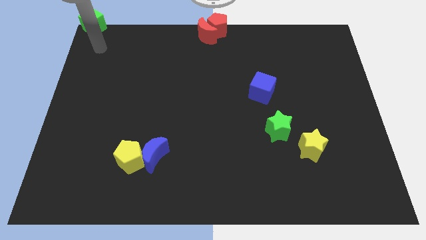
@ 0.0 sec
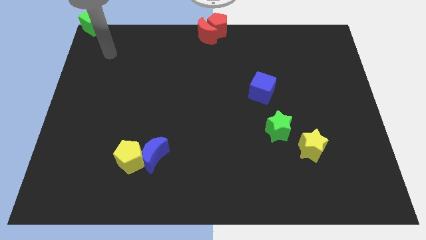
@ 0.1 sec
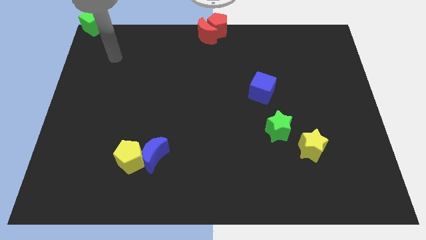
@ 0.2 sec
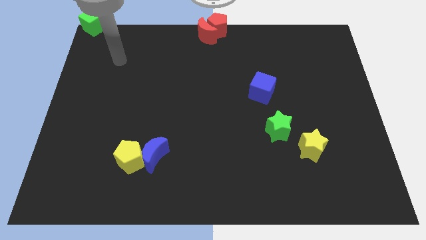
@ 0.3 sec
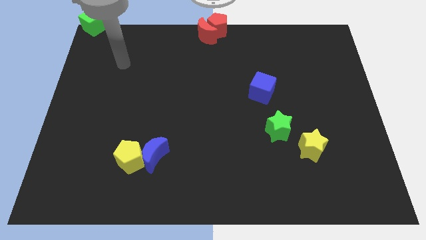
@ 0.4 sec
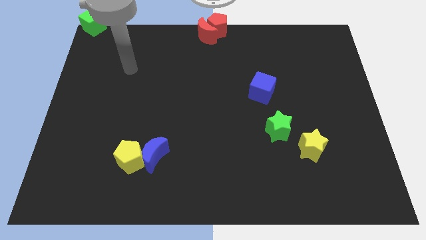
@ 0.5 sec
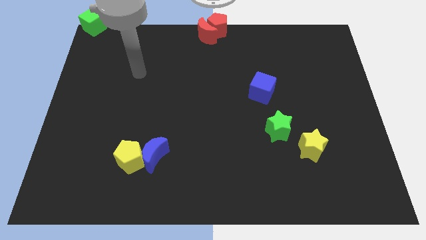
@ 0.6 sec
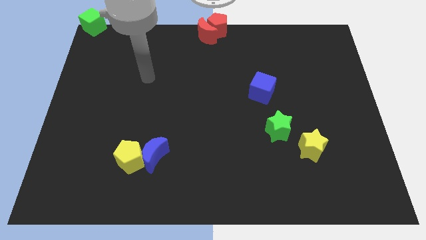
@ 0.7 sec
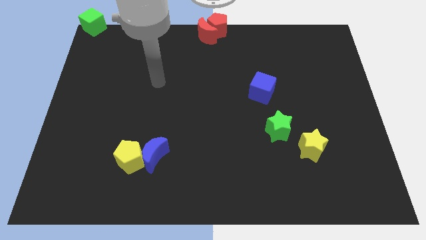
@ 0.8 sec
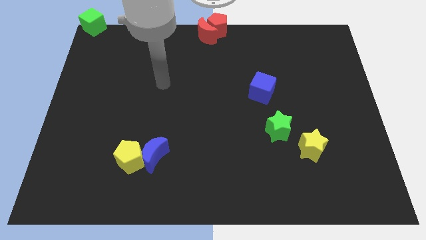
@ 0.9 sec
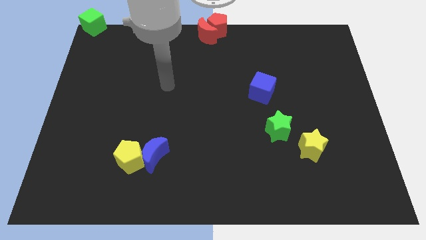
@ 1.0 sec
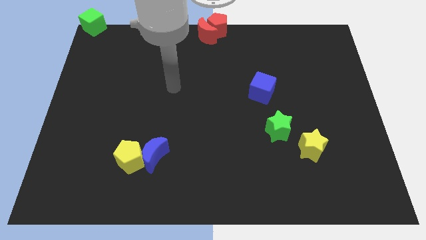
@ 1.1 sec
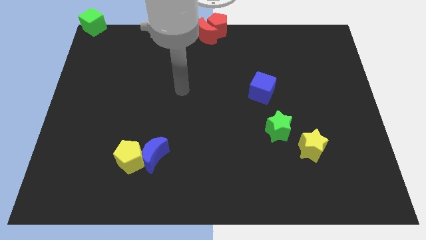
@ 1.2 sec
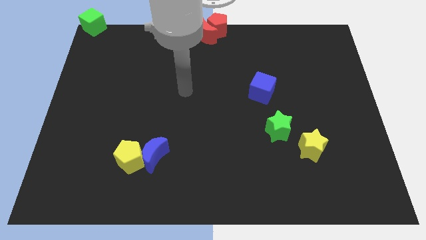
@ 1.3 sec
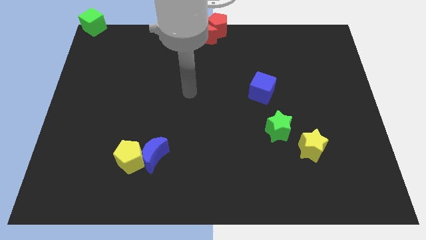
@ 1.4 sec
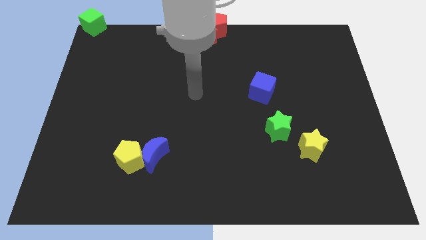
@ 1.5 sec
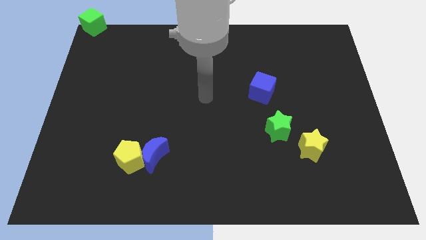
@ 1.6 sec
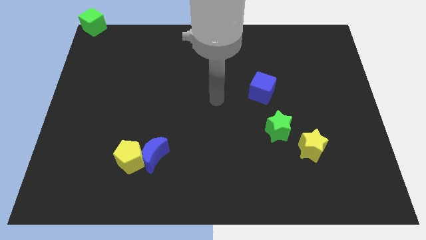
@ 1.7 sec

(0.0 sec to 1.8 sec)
point the arm to the center of the board

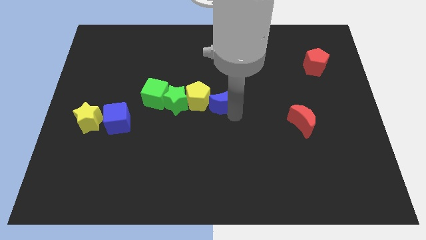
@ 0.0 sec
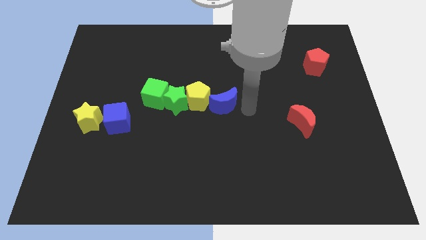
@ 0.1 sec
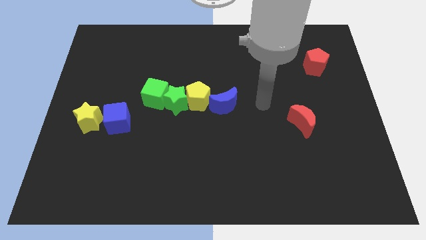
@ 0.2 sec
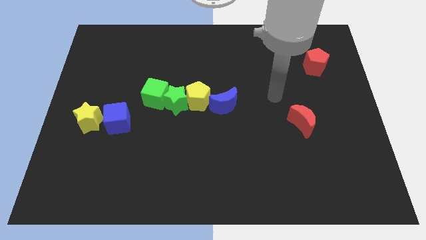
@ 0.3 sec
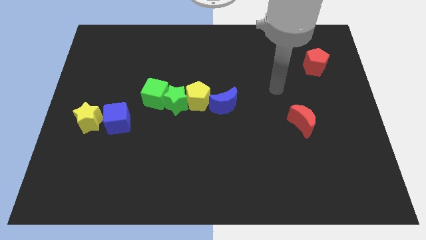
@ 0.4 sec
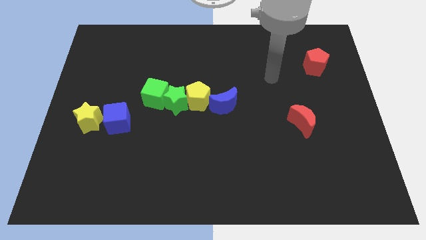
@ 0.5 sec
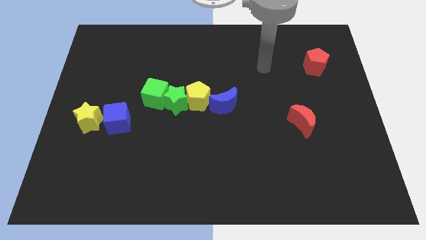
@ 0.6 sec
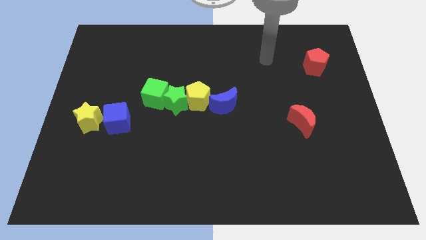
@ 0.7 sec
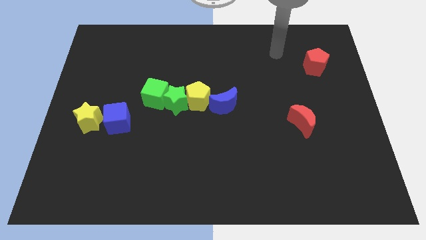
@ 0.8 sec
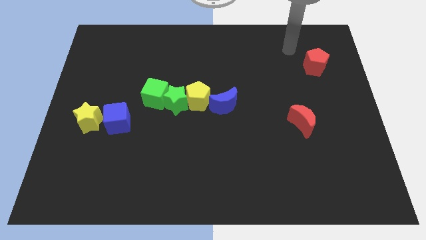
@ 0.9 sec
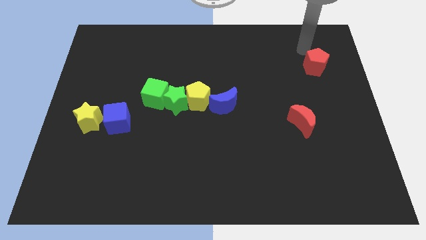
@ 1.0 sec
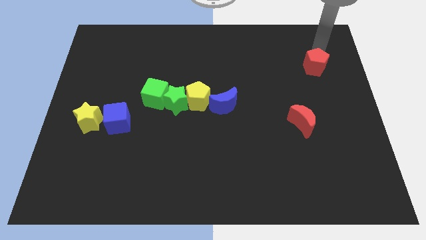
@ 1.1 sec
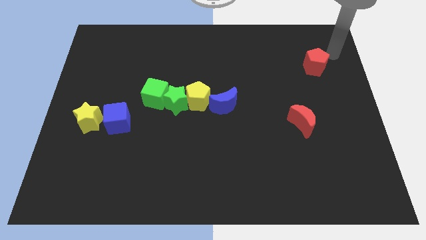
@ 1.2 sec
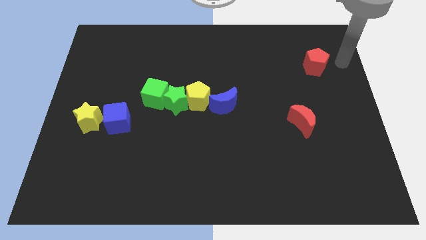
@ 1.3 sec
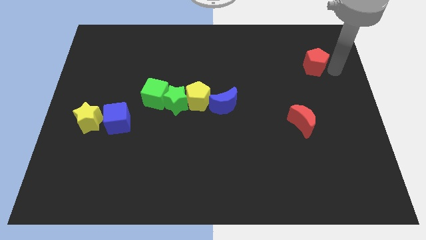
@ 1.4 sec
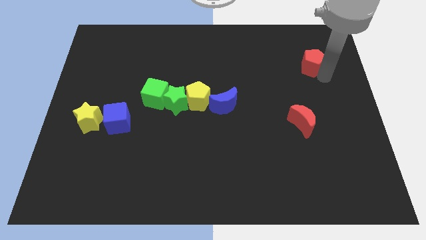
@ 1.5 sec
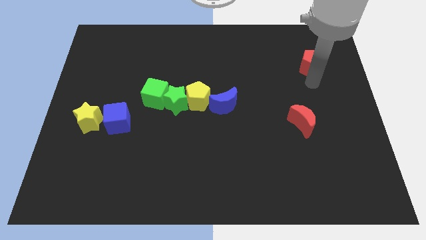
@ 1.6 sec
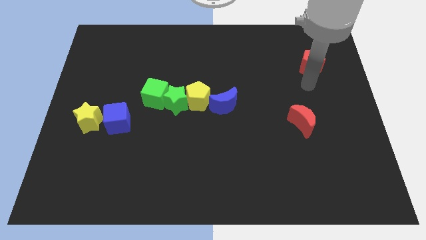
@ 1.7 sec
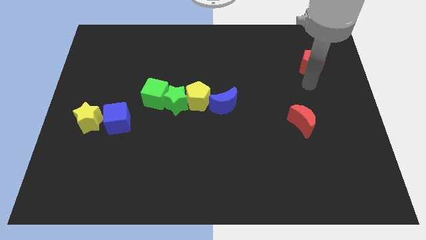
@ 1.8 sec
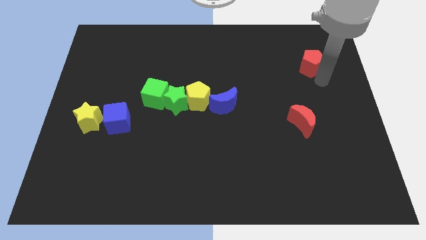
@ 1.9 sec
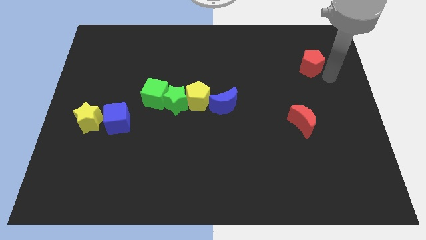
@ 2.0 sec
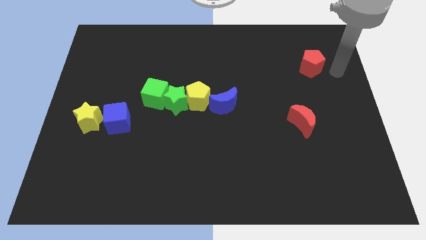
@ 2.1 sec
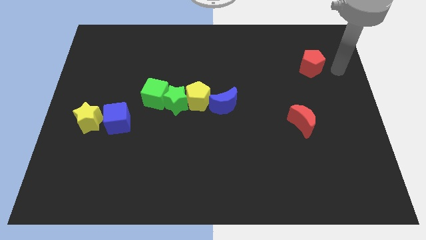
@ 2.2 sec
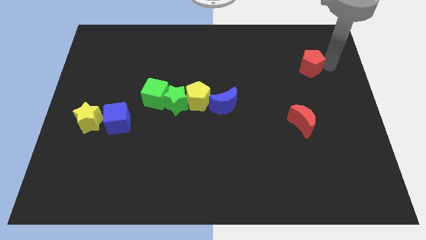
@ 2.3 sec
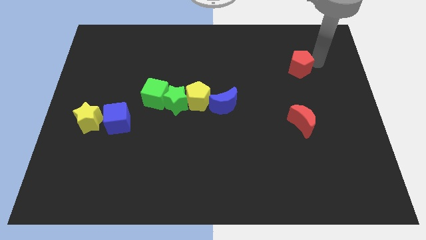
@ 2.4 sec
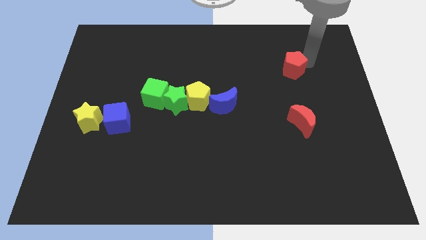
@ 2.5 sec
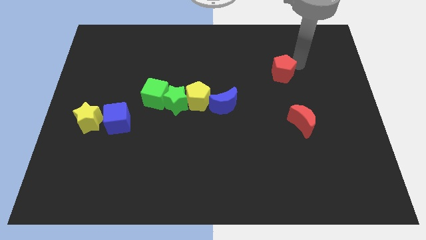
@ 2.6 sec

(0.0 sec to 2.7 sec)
push red pentagon above red crescent

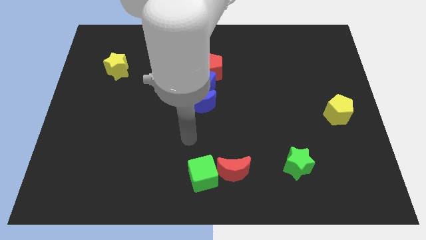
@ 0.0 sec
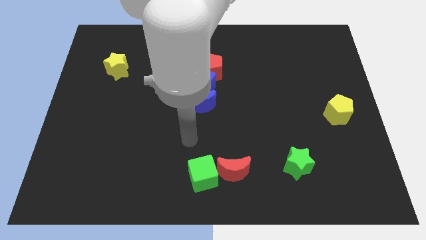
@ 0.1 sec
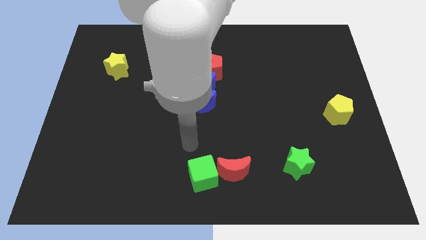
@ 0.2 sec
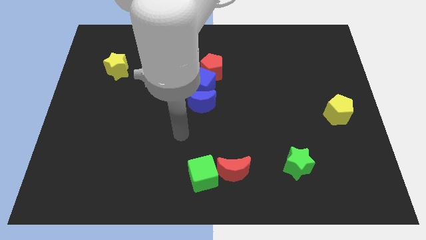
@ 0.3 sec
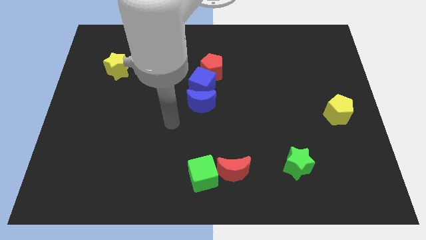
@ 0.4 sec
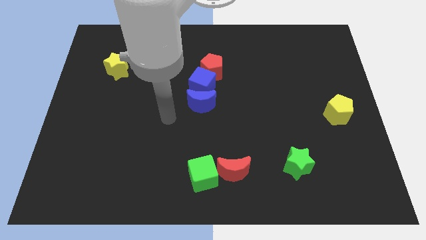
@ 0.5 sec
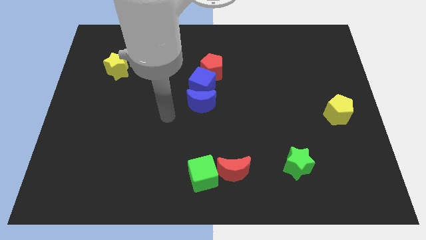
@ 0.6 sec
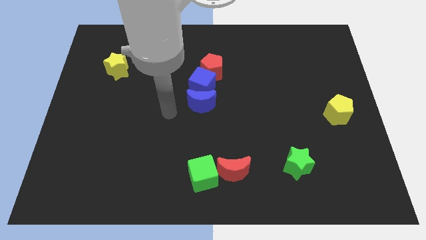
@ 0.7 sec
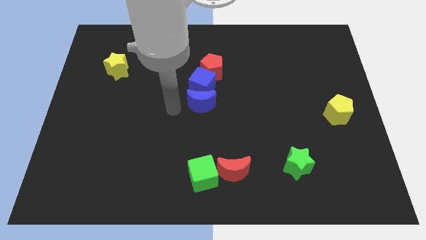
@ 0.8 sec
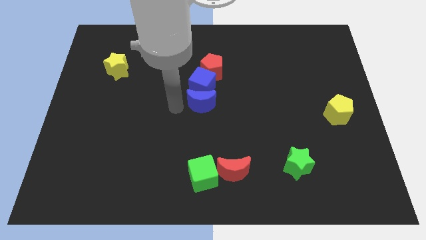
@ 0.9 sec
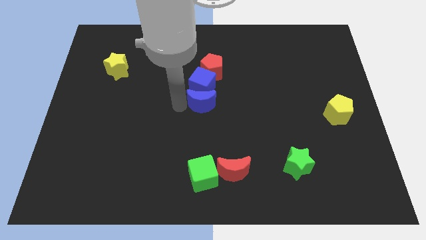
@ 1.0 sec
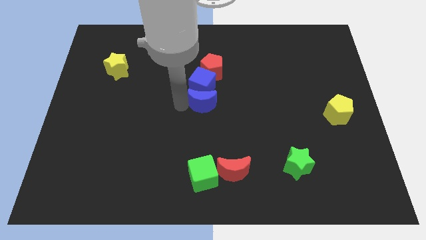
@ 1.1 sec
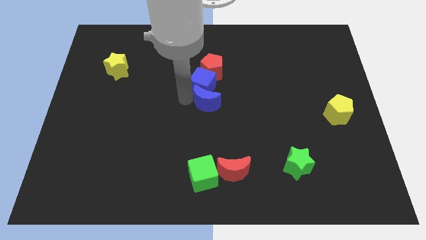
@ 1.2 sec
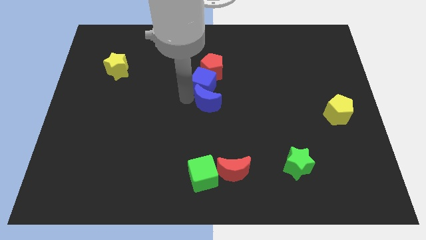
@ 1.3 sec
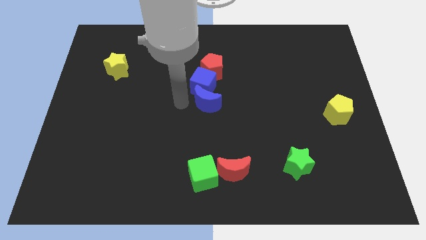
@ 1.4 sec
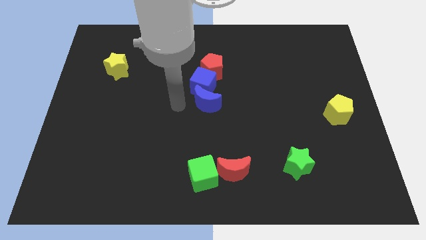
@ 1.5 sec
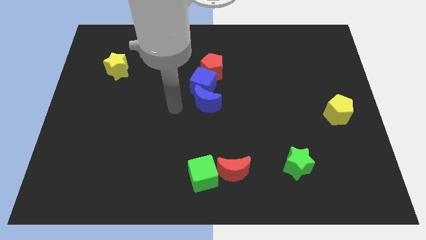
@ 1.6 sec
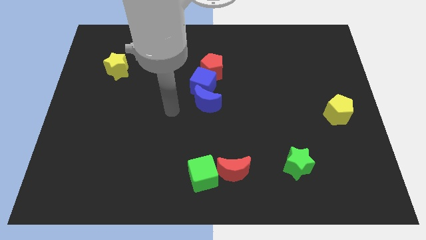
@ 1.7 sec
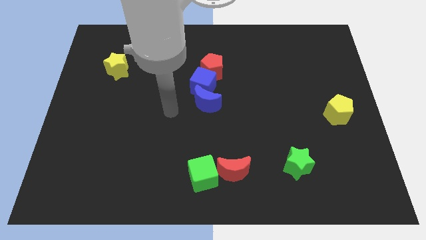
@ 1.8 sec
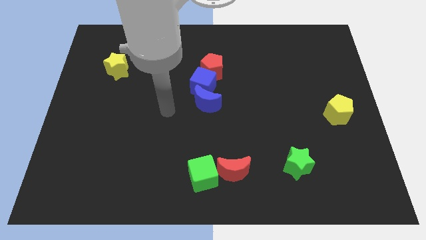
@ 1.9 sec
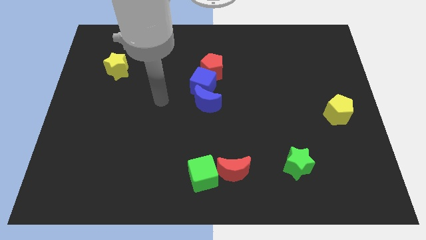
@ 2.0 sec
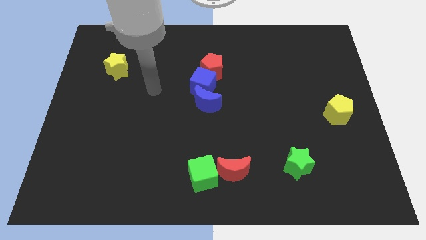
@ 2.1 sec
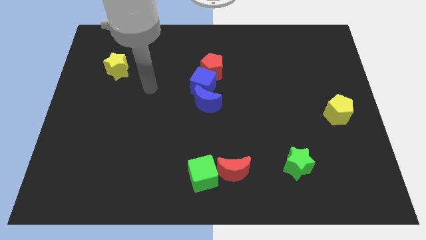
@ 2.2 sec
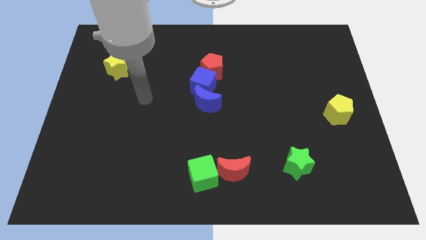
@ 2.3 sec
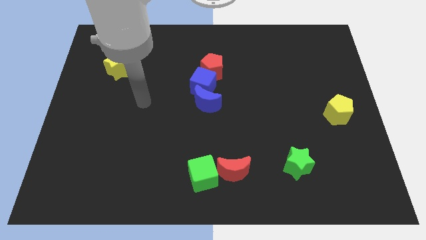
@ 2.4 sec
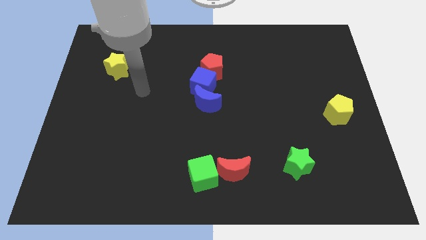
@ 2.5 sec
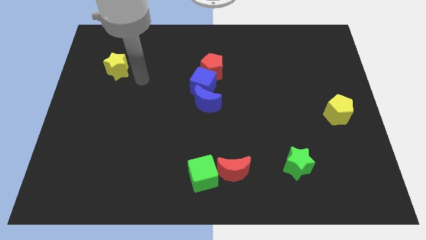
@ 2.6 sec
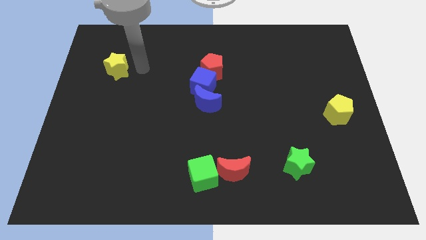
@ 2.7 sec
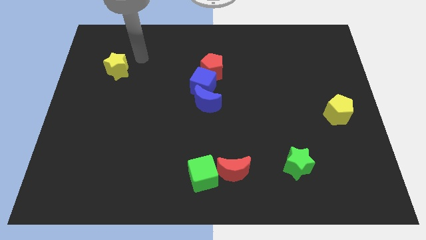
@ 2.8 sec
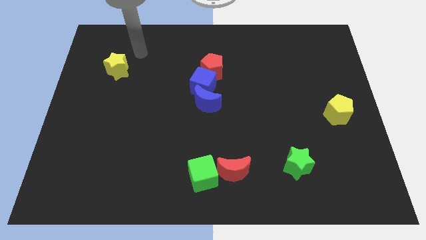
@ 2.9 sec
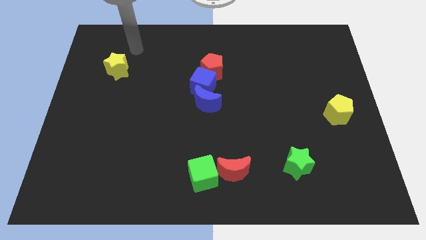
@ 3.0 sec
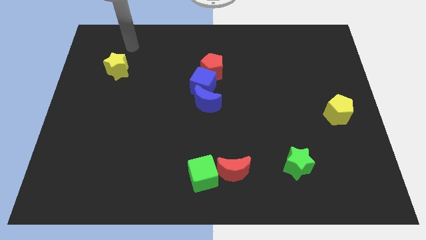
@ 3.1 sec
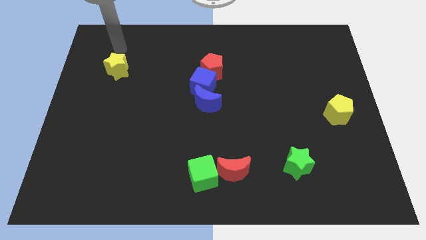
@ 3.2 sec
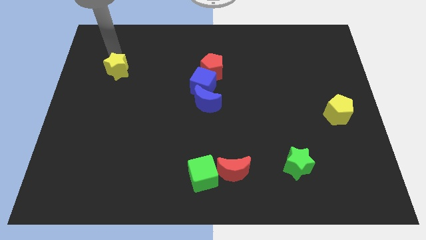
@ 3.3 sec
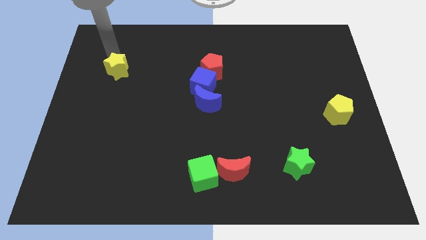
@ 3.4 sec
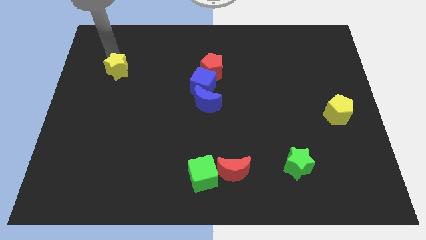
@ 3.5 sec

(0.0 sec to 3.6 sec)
adjust the blue blocks and move away

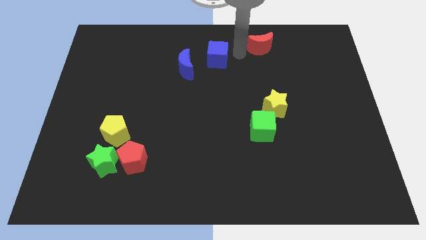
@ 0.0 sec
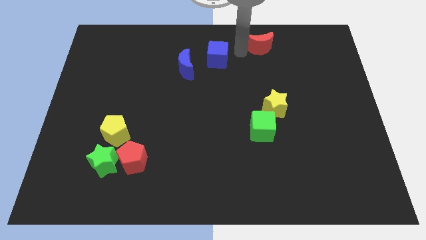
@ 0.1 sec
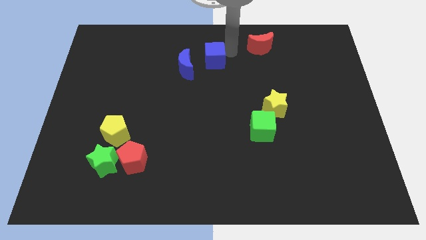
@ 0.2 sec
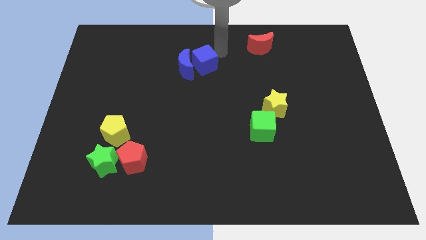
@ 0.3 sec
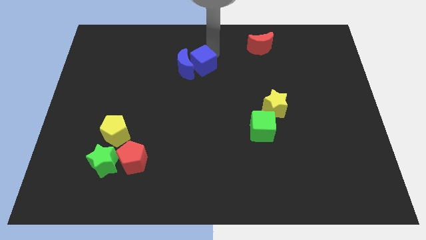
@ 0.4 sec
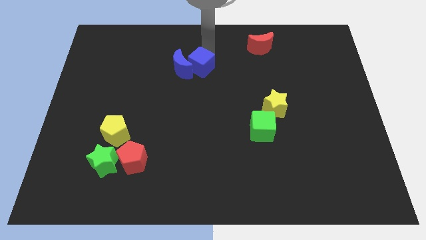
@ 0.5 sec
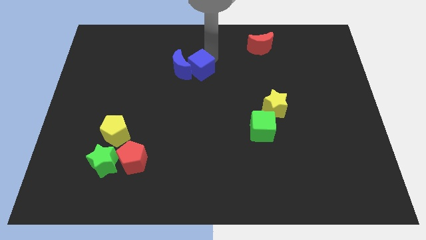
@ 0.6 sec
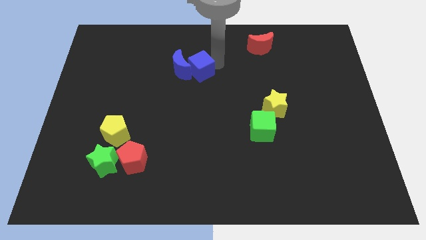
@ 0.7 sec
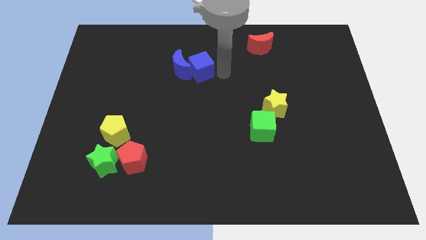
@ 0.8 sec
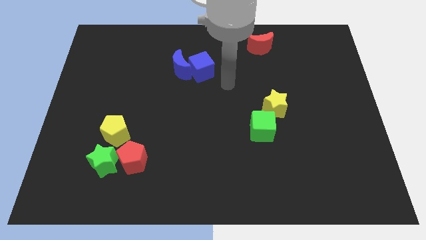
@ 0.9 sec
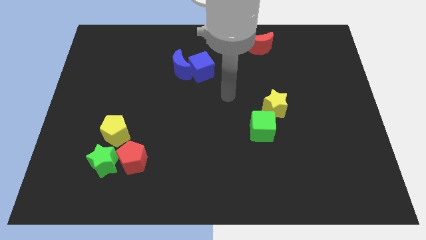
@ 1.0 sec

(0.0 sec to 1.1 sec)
push the blue cube into the blue crescent
